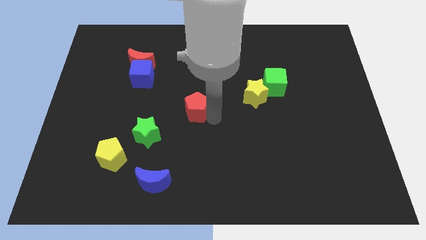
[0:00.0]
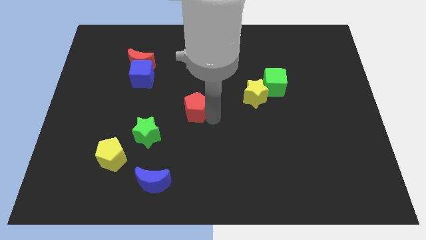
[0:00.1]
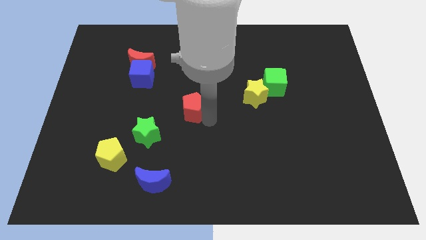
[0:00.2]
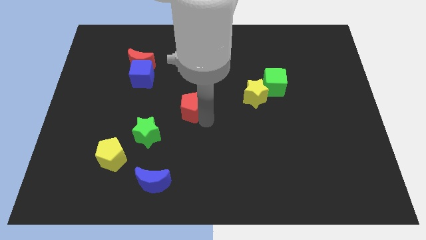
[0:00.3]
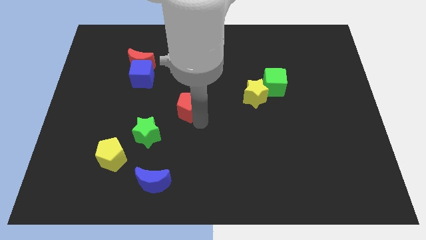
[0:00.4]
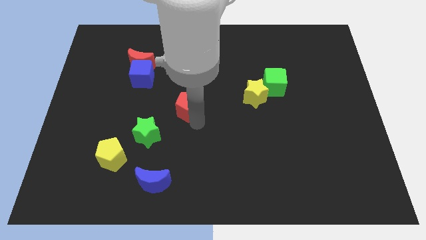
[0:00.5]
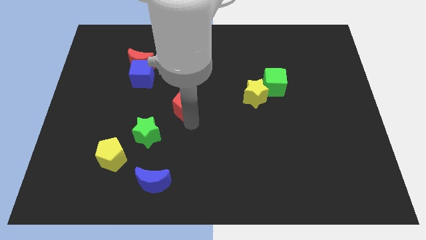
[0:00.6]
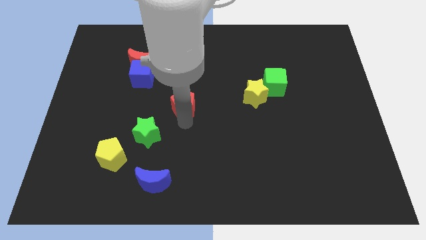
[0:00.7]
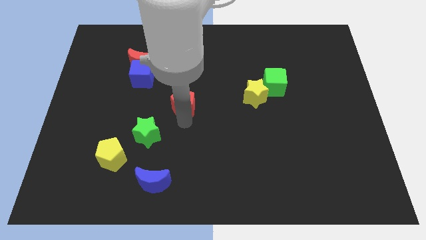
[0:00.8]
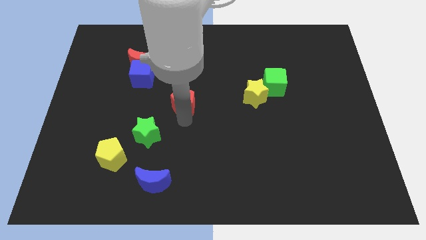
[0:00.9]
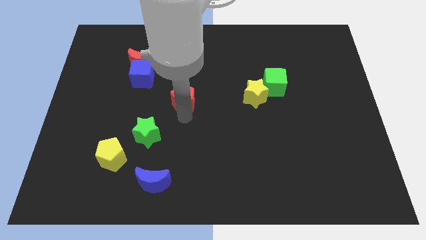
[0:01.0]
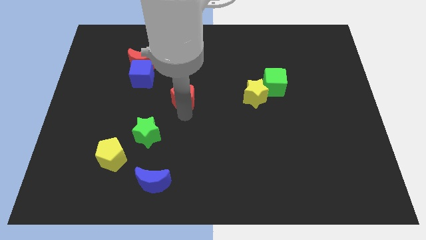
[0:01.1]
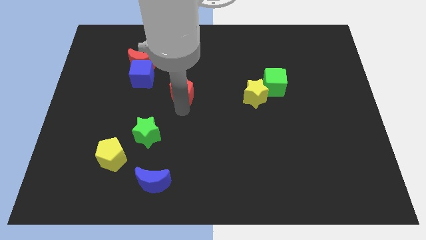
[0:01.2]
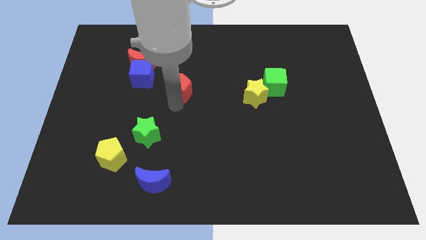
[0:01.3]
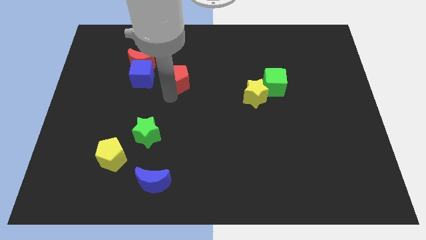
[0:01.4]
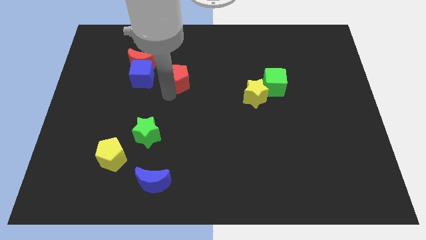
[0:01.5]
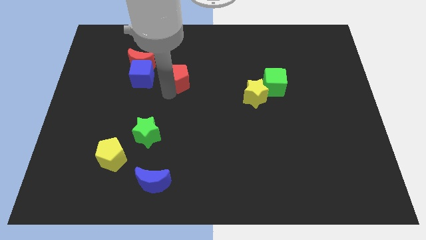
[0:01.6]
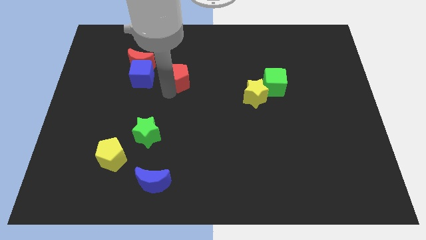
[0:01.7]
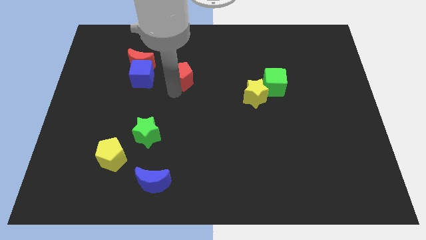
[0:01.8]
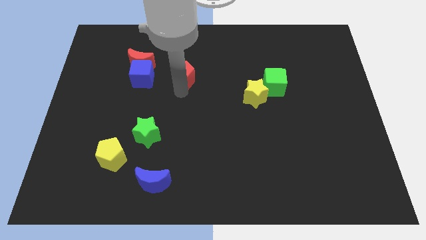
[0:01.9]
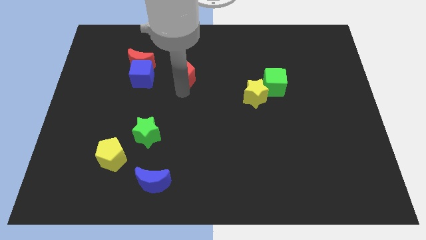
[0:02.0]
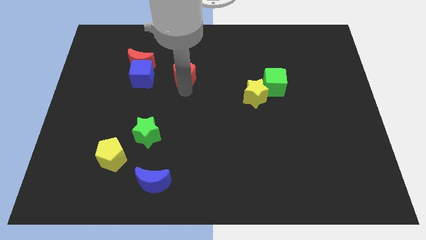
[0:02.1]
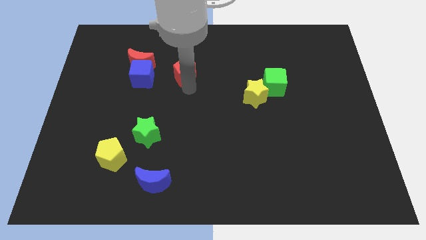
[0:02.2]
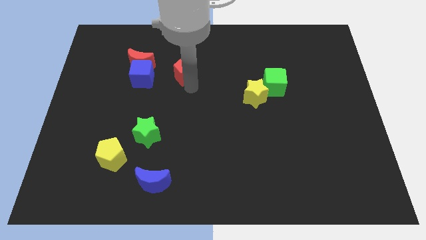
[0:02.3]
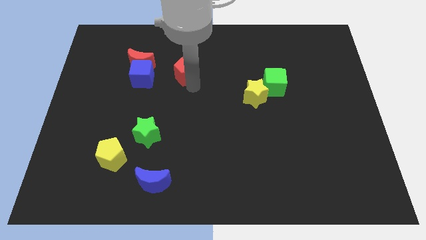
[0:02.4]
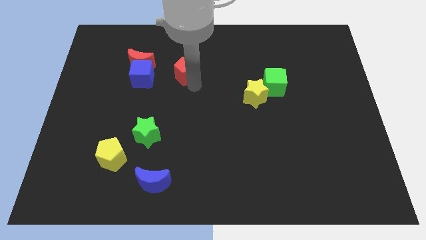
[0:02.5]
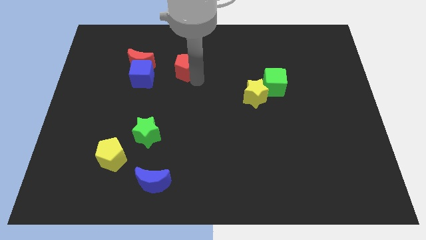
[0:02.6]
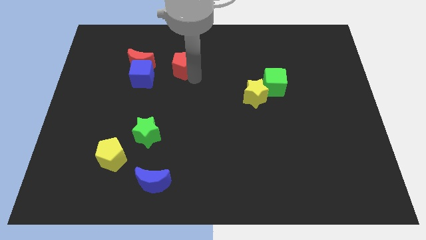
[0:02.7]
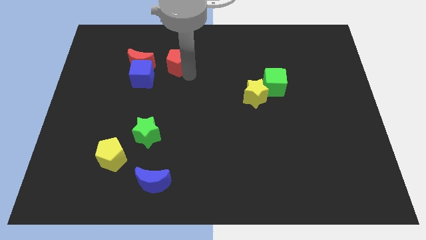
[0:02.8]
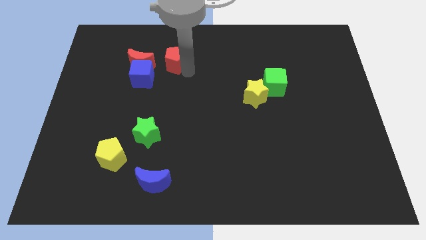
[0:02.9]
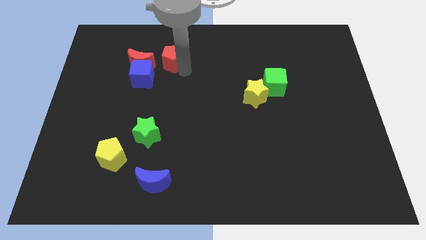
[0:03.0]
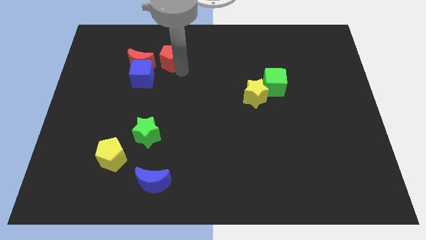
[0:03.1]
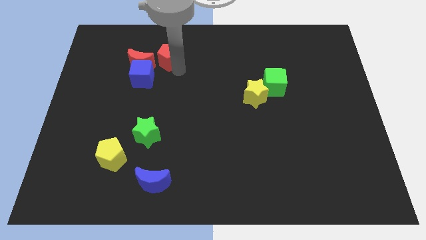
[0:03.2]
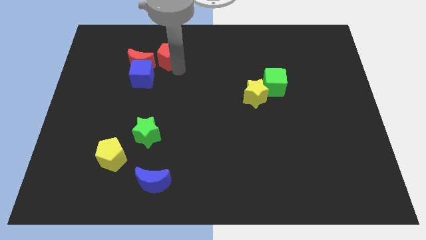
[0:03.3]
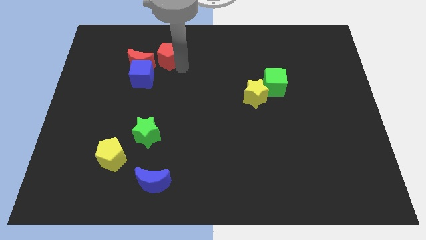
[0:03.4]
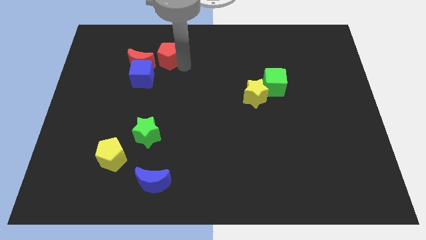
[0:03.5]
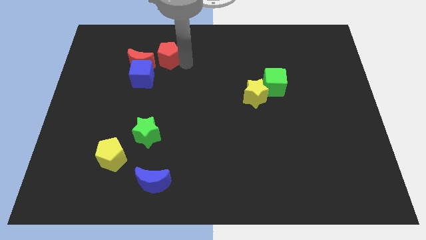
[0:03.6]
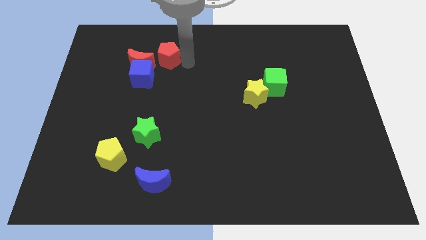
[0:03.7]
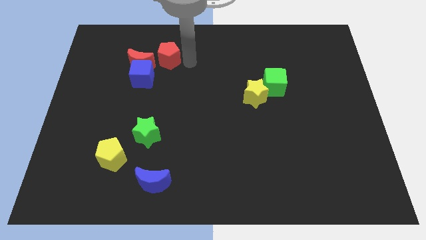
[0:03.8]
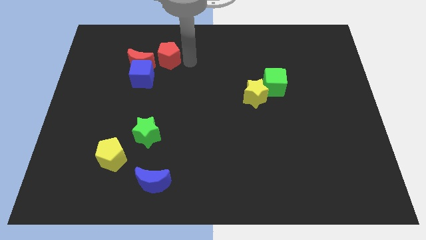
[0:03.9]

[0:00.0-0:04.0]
move the red pentagon right to the red moon

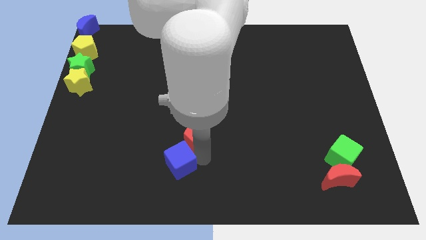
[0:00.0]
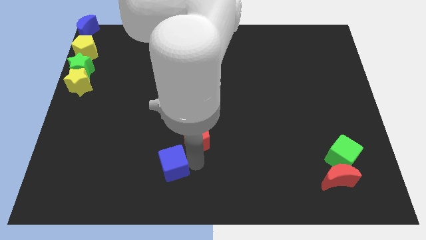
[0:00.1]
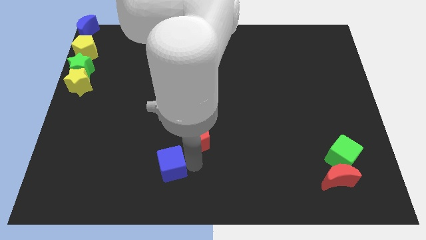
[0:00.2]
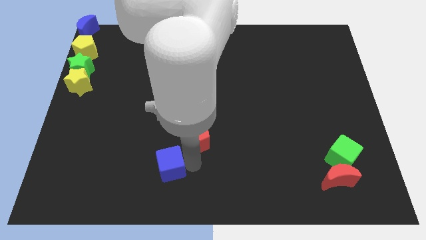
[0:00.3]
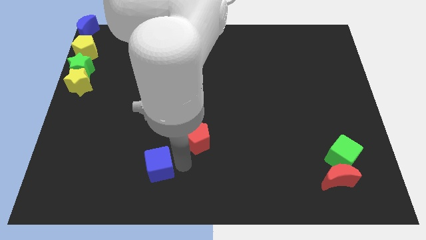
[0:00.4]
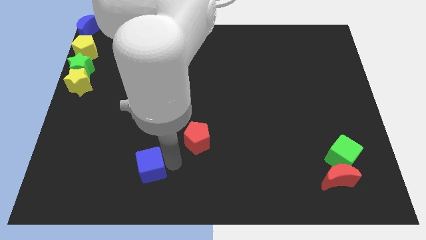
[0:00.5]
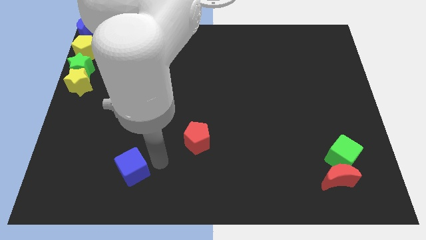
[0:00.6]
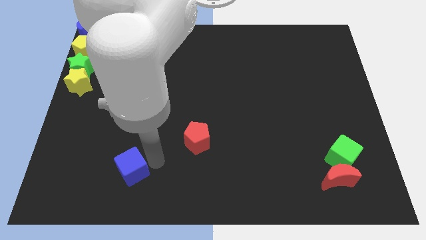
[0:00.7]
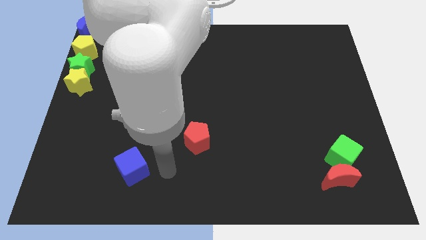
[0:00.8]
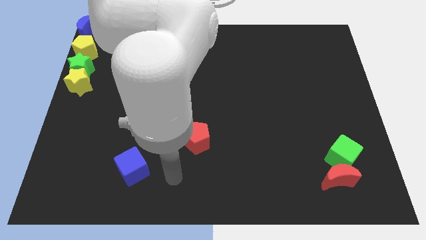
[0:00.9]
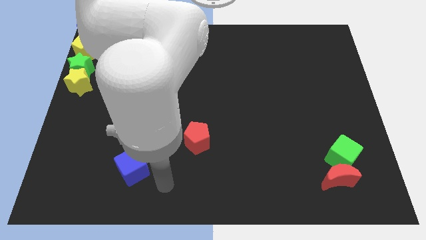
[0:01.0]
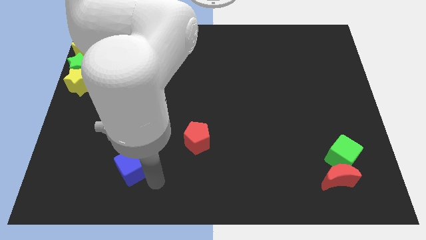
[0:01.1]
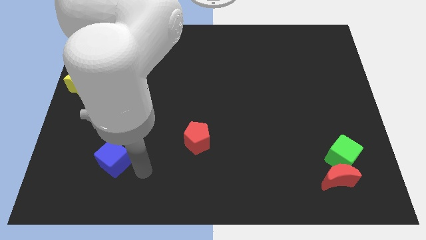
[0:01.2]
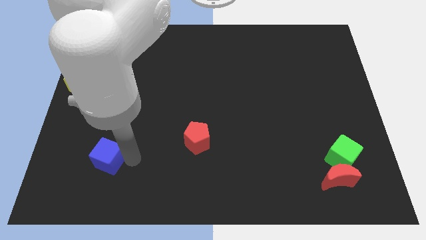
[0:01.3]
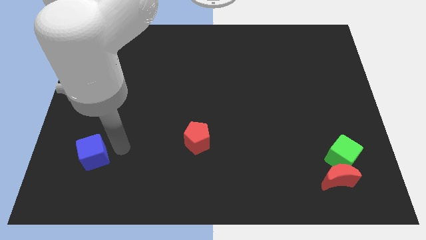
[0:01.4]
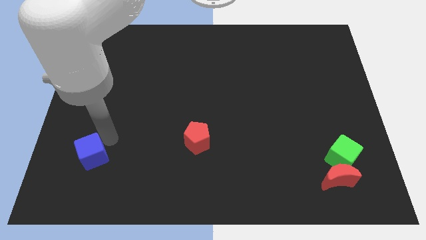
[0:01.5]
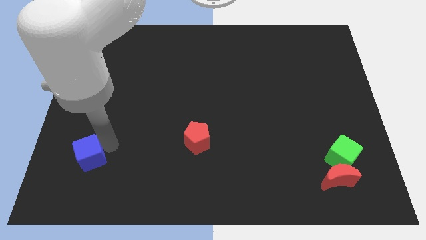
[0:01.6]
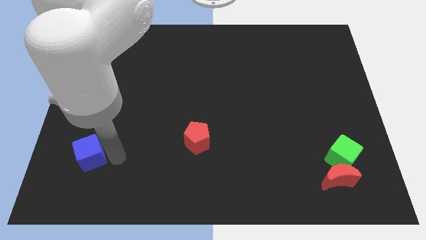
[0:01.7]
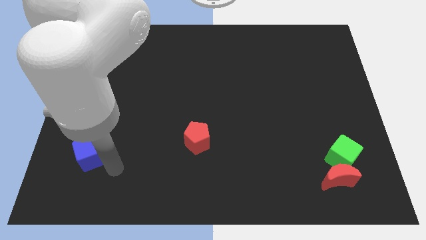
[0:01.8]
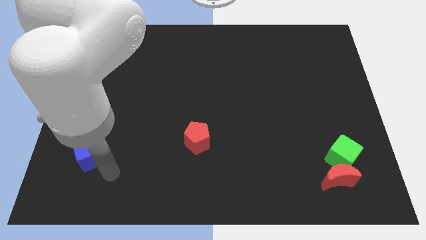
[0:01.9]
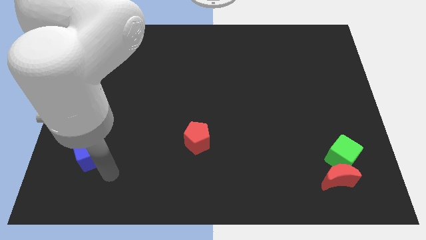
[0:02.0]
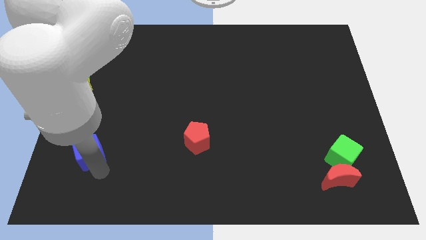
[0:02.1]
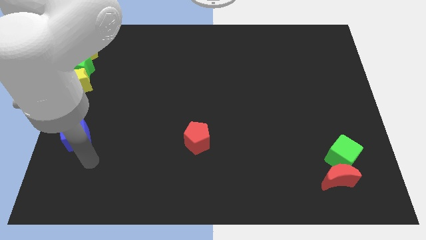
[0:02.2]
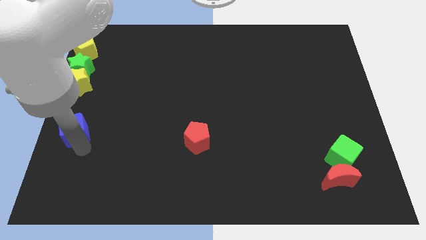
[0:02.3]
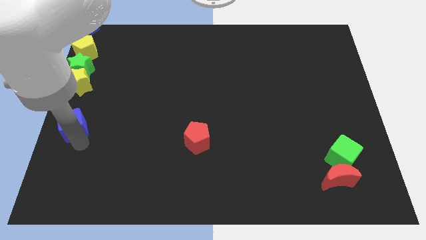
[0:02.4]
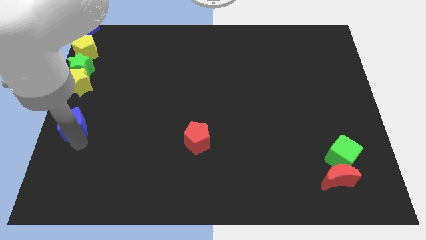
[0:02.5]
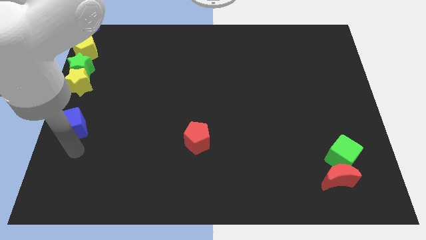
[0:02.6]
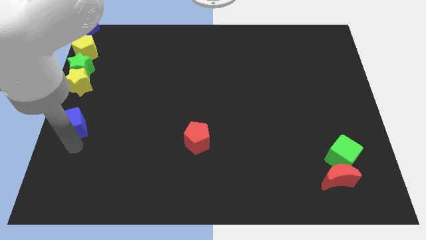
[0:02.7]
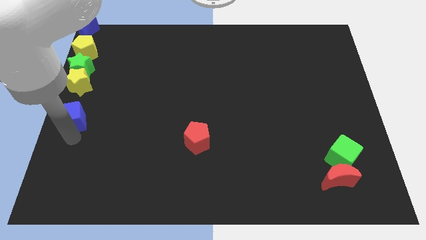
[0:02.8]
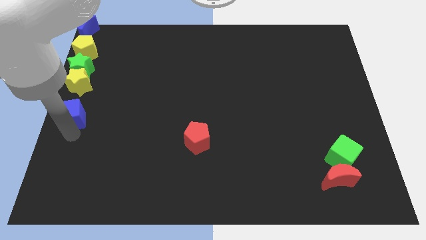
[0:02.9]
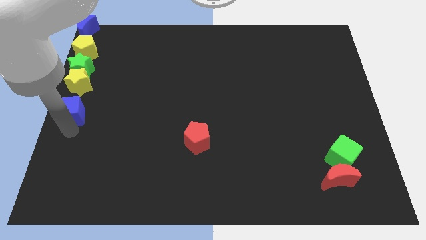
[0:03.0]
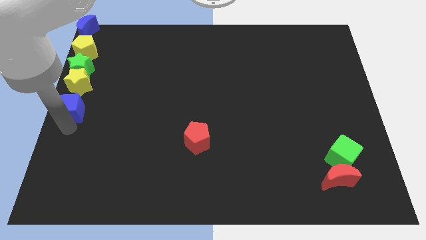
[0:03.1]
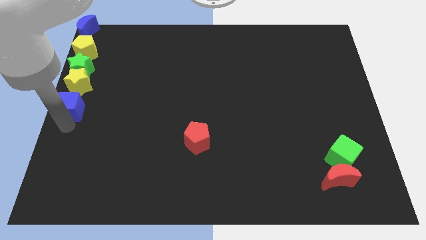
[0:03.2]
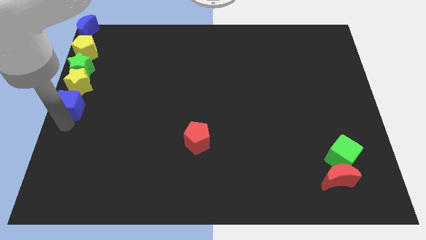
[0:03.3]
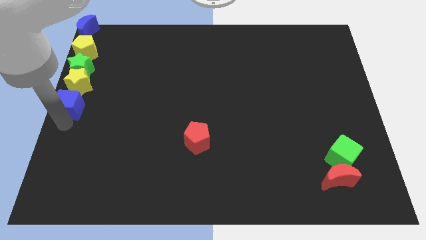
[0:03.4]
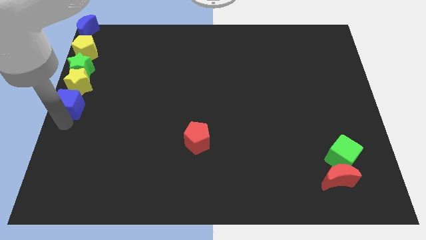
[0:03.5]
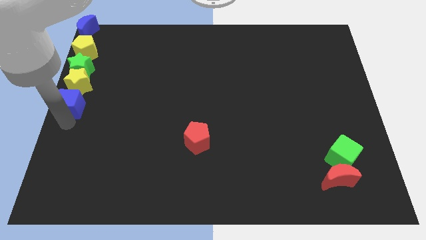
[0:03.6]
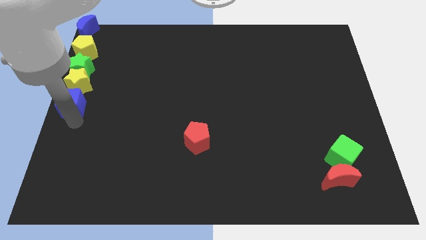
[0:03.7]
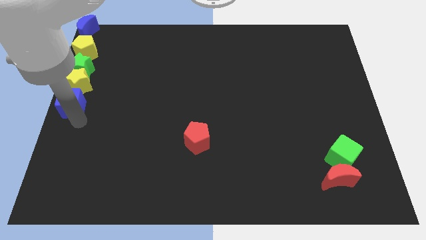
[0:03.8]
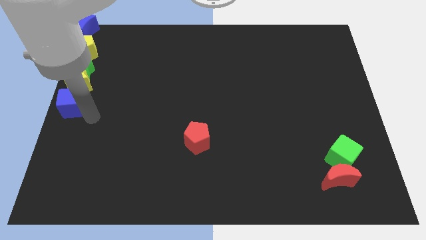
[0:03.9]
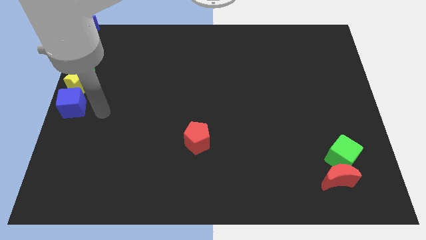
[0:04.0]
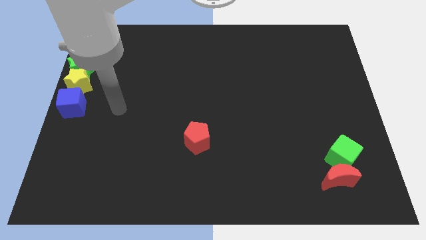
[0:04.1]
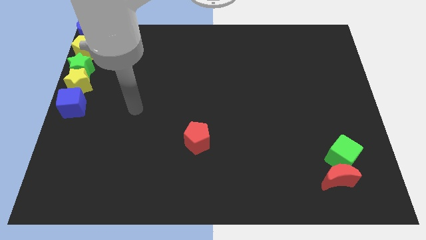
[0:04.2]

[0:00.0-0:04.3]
push the blue cube to the bottom of the yellow star

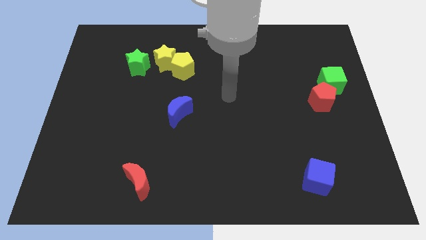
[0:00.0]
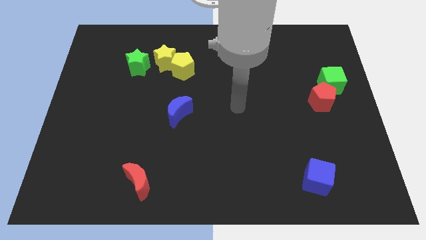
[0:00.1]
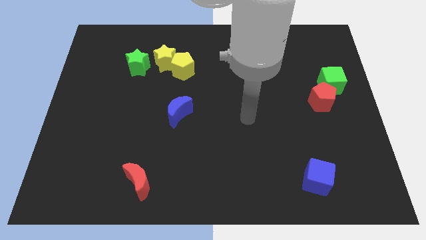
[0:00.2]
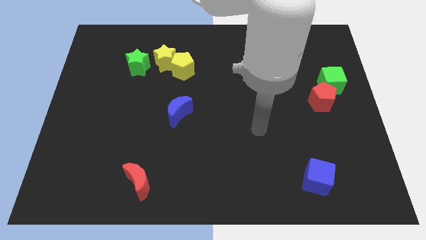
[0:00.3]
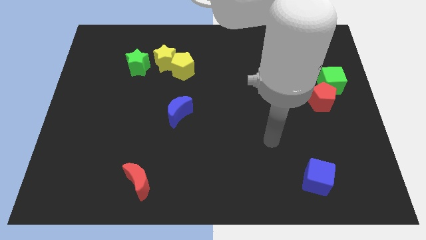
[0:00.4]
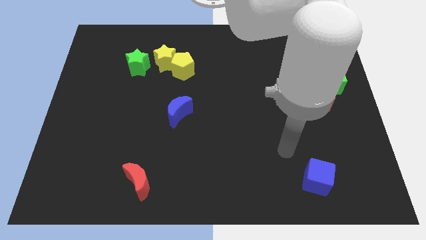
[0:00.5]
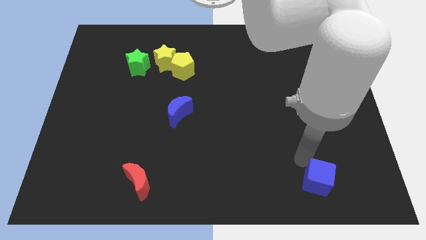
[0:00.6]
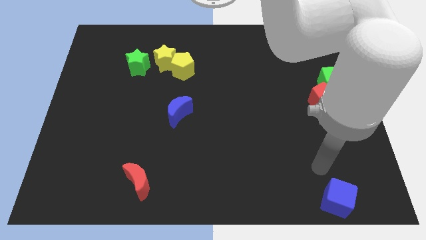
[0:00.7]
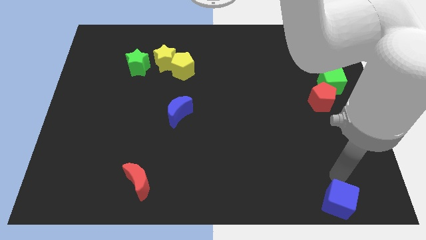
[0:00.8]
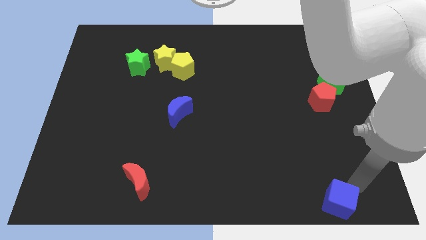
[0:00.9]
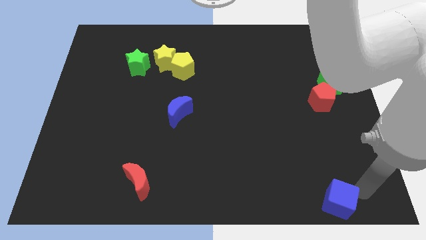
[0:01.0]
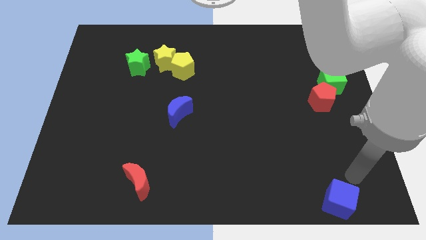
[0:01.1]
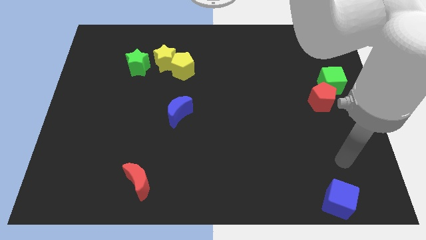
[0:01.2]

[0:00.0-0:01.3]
slide the blue cube towards bottom
